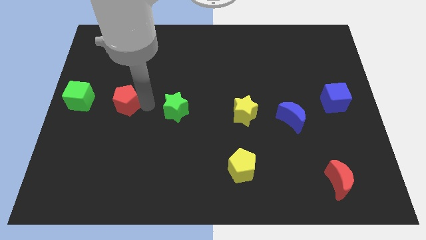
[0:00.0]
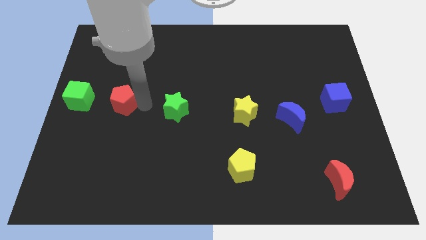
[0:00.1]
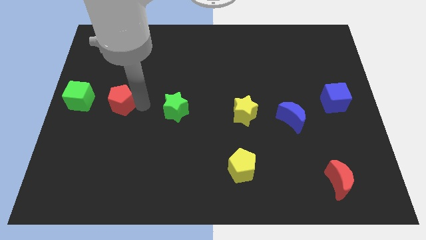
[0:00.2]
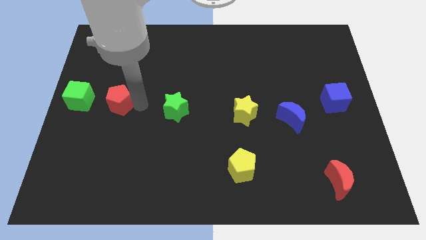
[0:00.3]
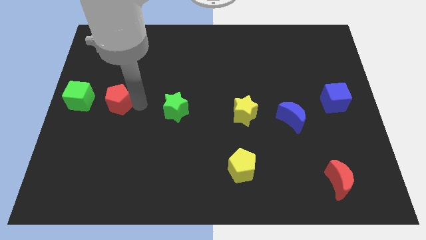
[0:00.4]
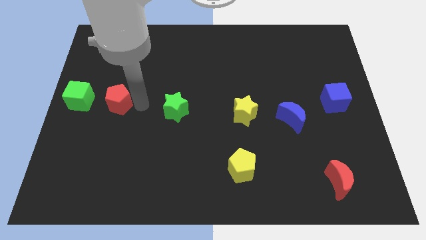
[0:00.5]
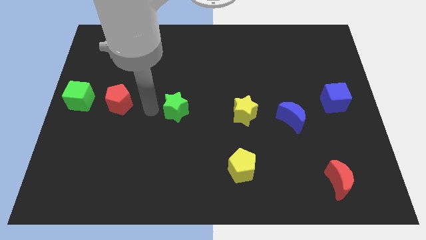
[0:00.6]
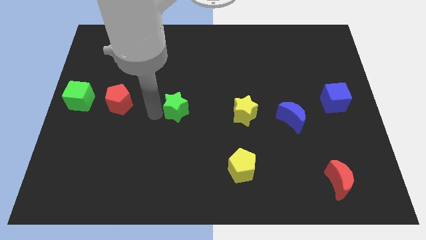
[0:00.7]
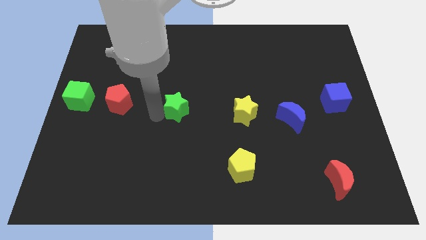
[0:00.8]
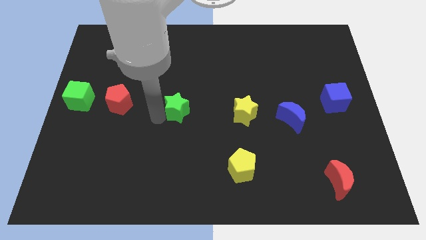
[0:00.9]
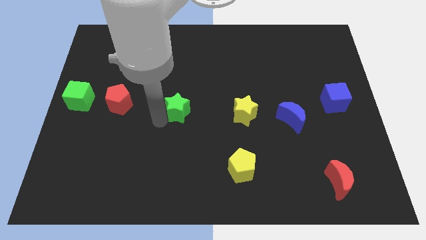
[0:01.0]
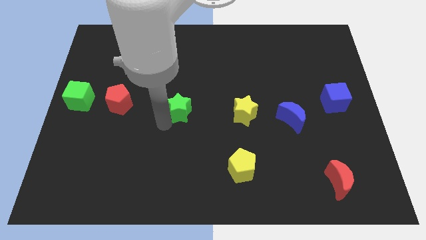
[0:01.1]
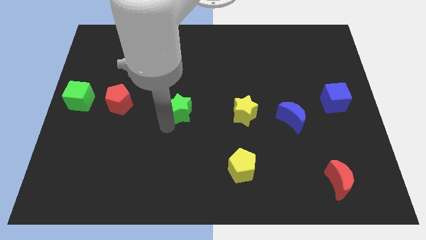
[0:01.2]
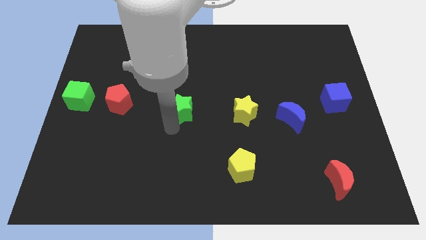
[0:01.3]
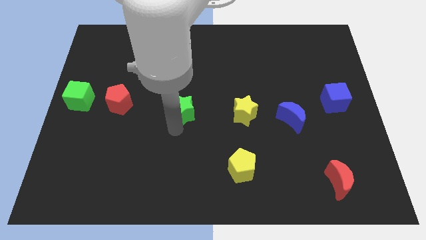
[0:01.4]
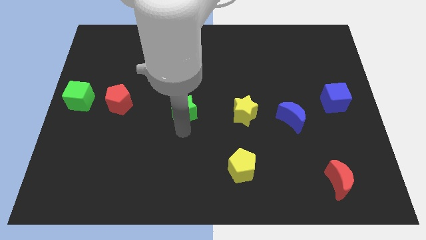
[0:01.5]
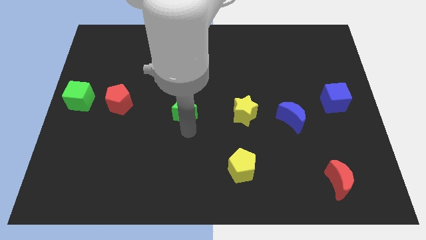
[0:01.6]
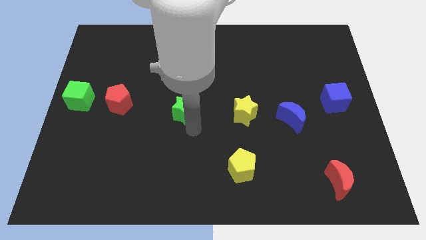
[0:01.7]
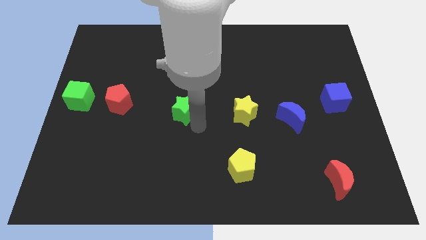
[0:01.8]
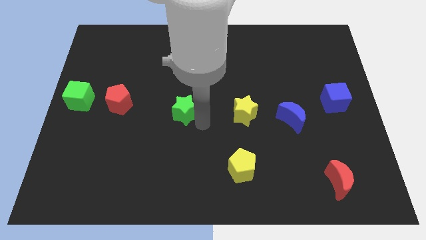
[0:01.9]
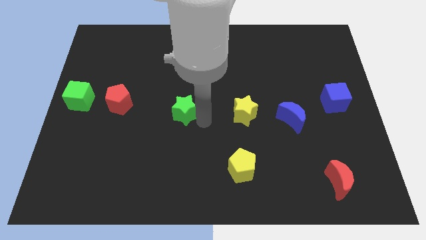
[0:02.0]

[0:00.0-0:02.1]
move the green star to the horizontal line

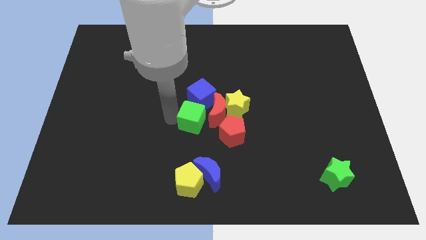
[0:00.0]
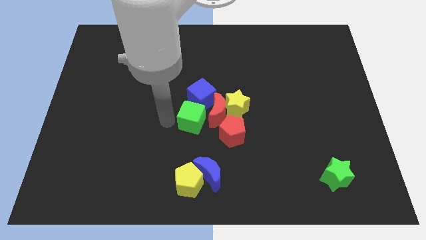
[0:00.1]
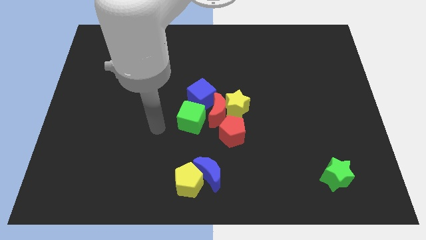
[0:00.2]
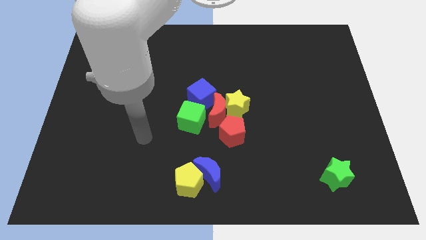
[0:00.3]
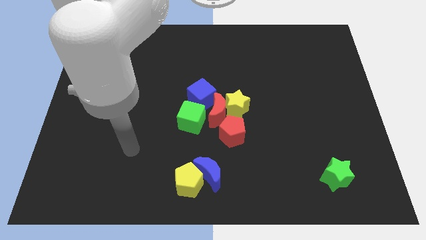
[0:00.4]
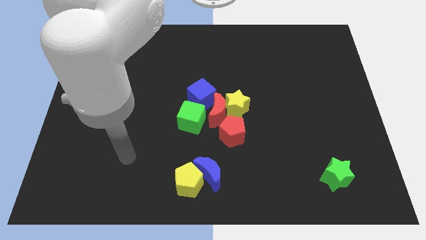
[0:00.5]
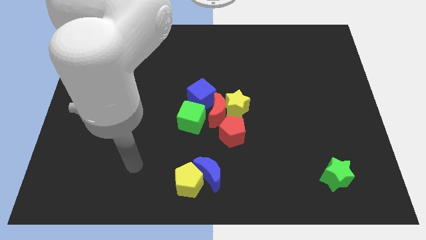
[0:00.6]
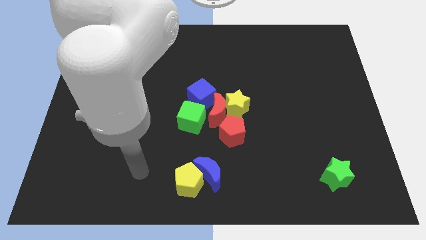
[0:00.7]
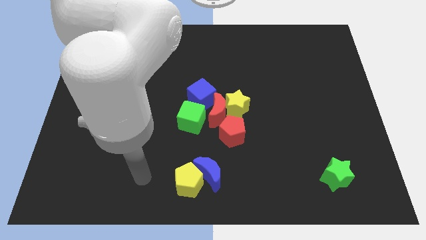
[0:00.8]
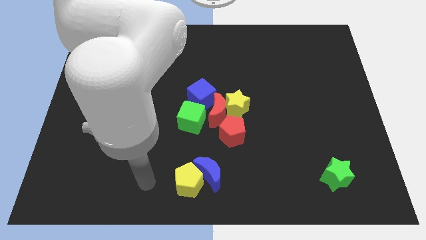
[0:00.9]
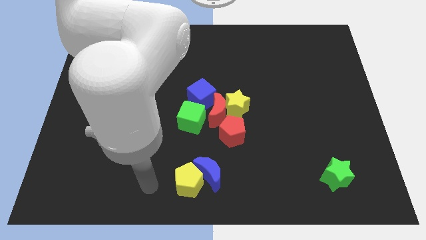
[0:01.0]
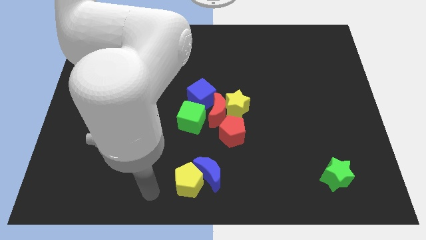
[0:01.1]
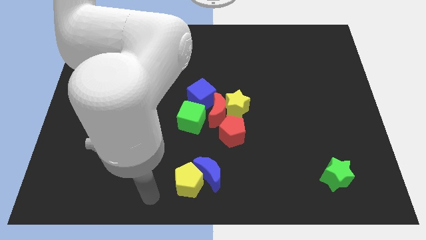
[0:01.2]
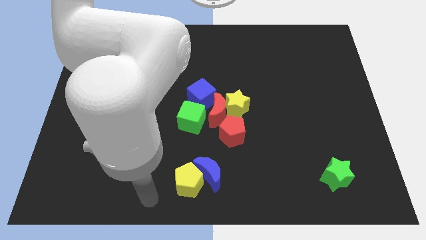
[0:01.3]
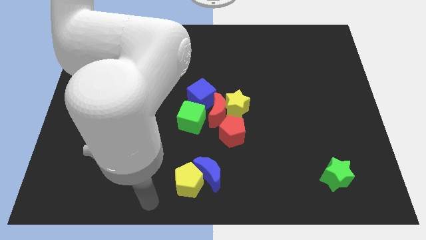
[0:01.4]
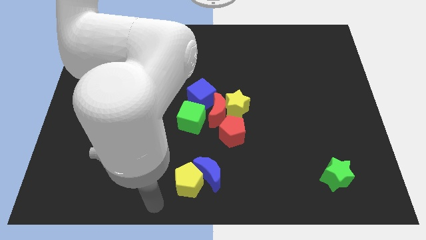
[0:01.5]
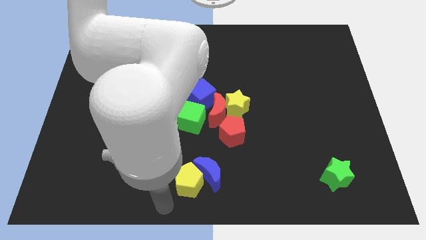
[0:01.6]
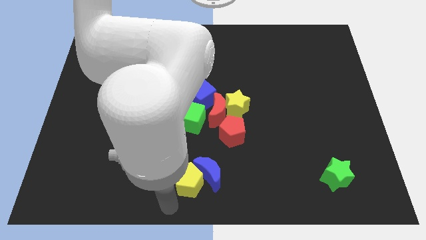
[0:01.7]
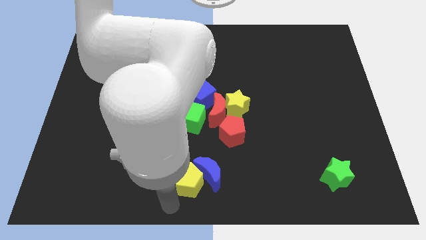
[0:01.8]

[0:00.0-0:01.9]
point your arm to the bottom left of the yellow pentagon

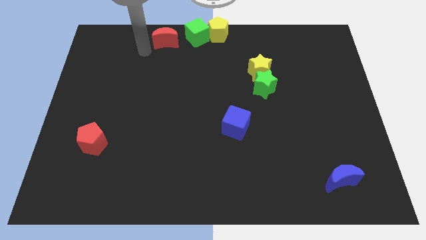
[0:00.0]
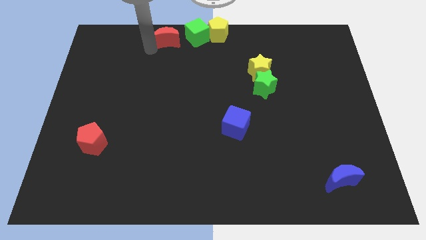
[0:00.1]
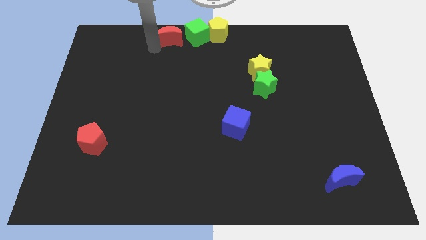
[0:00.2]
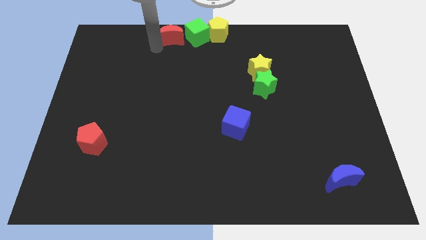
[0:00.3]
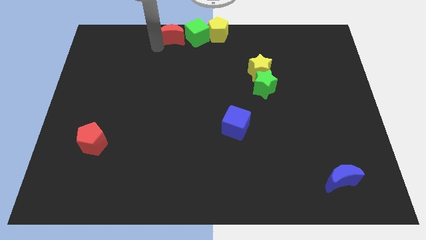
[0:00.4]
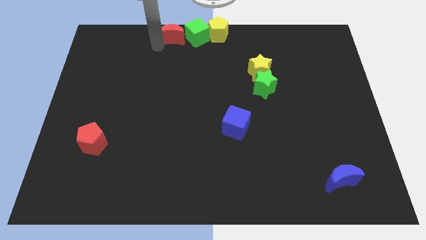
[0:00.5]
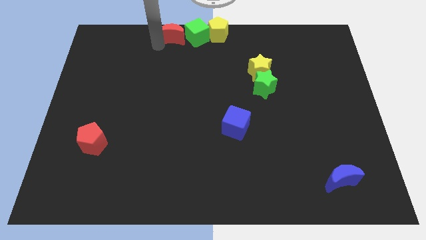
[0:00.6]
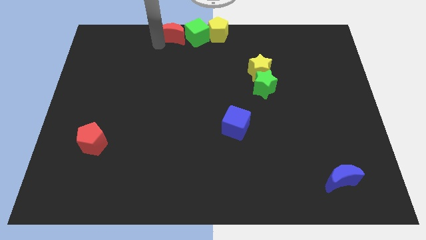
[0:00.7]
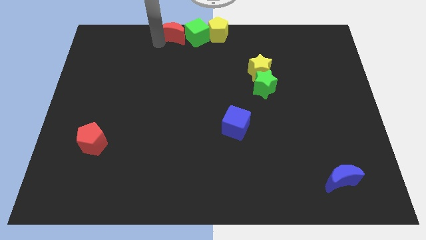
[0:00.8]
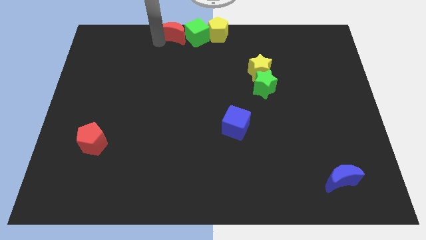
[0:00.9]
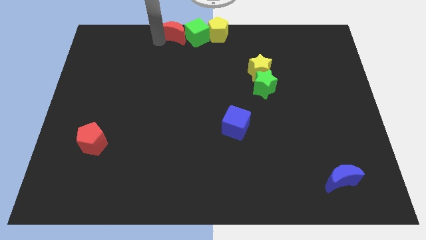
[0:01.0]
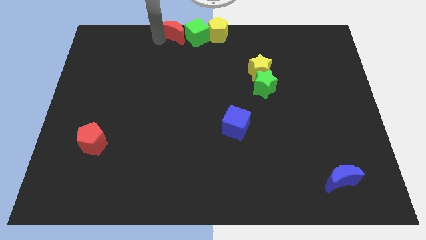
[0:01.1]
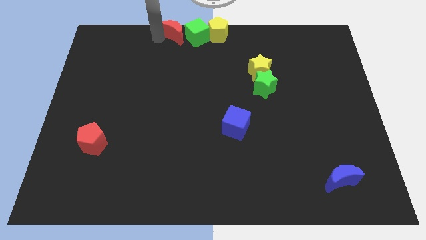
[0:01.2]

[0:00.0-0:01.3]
slide the red moon close to the left side of the green cube

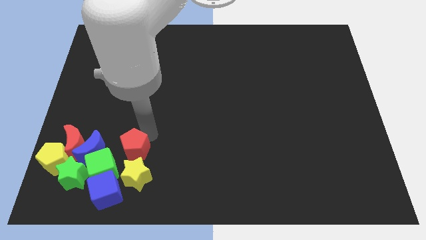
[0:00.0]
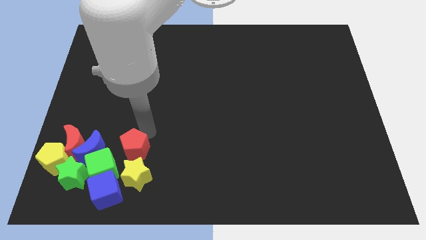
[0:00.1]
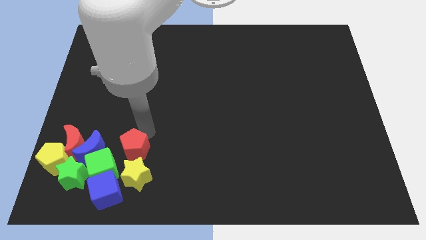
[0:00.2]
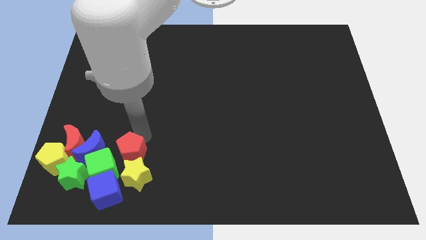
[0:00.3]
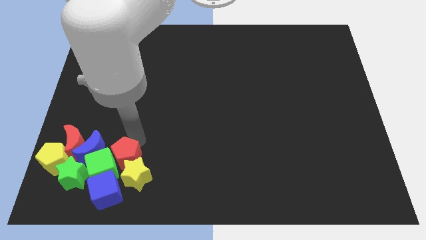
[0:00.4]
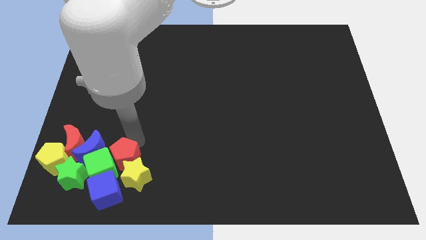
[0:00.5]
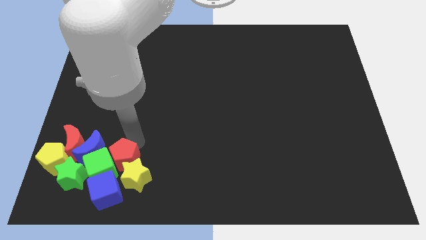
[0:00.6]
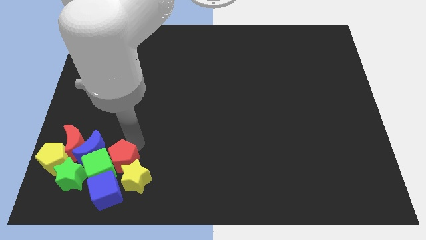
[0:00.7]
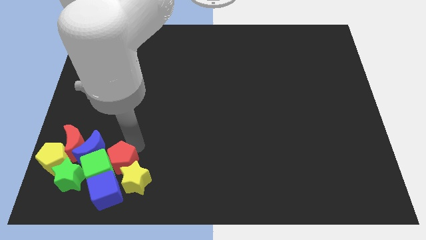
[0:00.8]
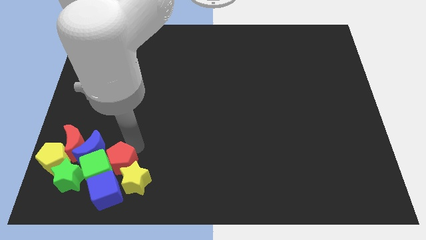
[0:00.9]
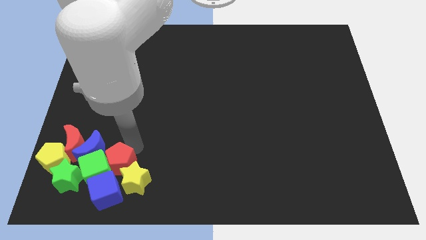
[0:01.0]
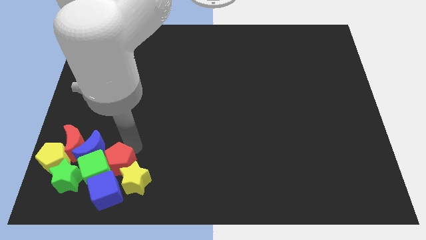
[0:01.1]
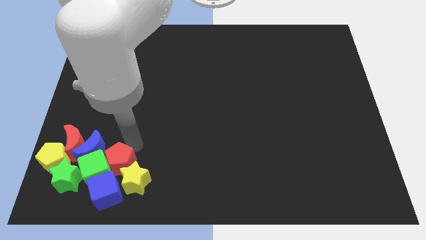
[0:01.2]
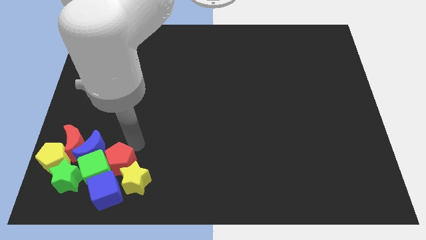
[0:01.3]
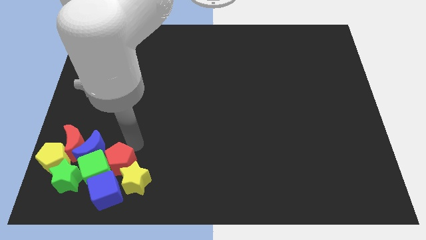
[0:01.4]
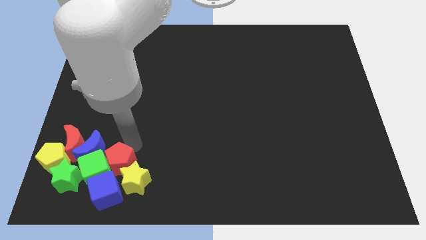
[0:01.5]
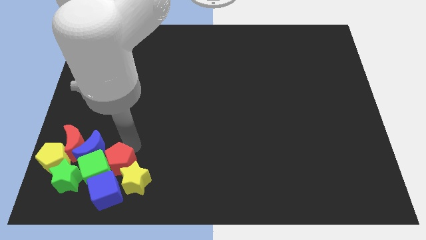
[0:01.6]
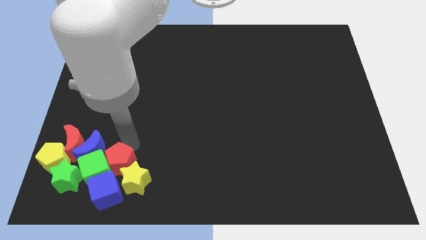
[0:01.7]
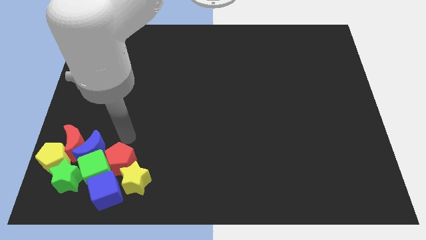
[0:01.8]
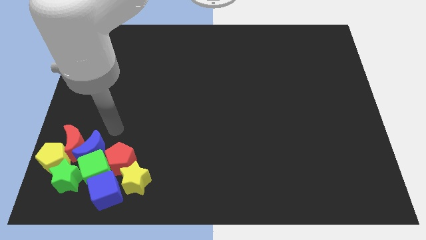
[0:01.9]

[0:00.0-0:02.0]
place the red pentagon to the top of the yellow star

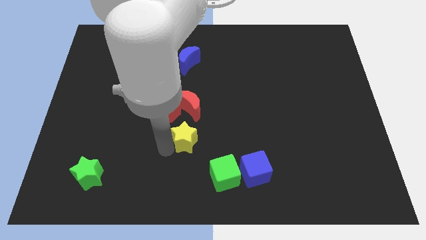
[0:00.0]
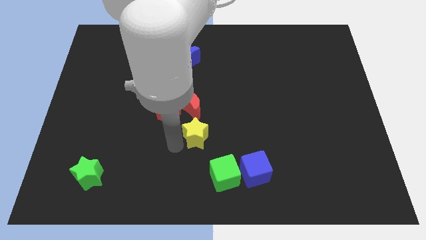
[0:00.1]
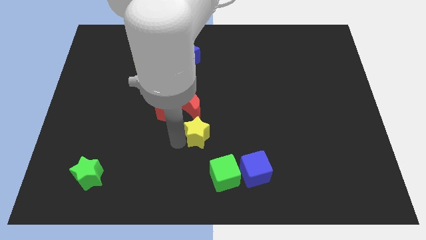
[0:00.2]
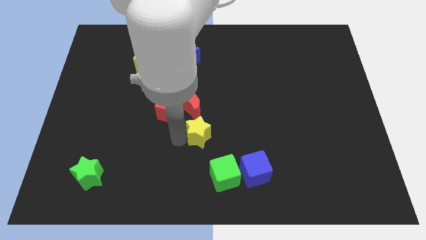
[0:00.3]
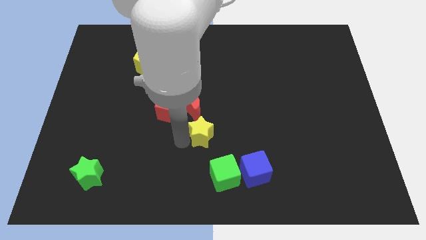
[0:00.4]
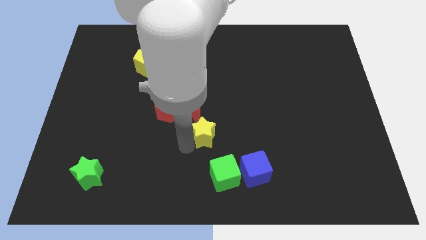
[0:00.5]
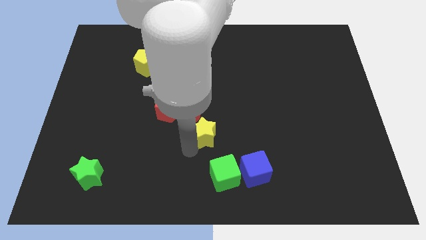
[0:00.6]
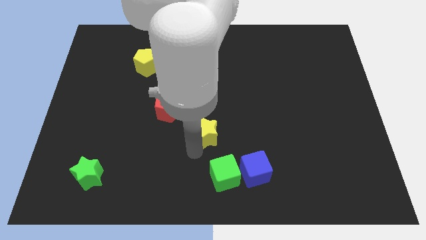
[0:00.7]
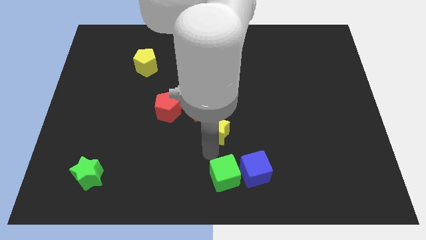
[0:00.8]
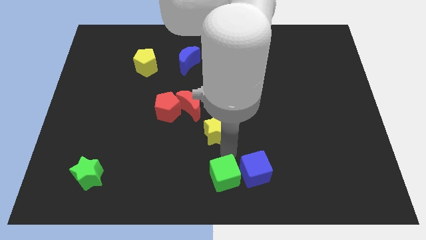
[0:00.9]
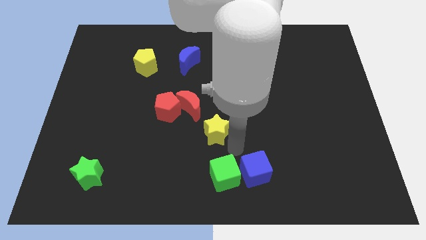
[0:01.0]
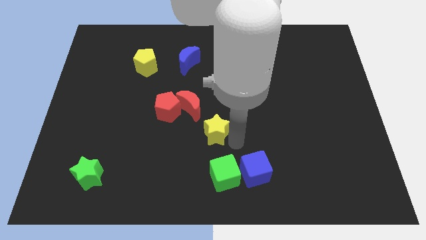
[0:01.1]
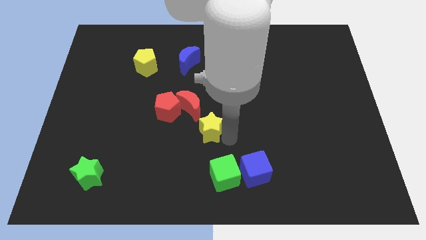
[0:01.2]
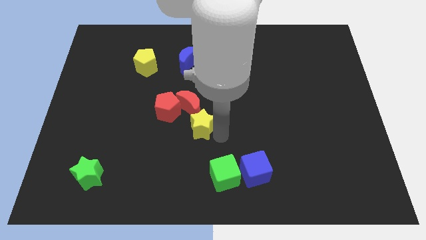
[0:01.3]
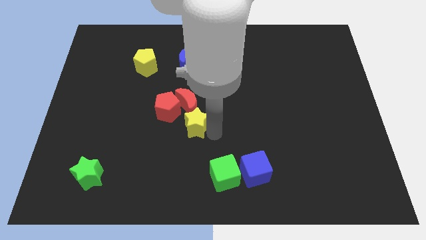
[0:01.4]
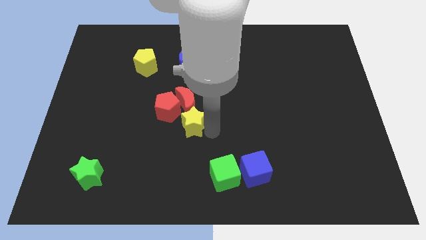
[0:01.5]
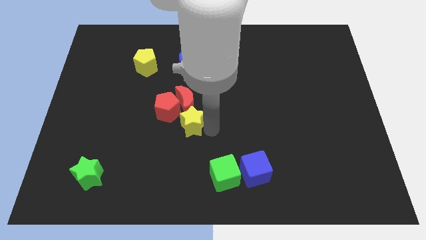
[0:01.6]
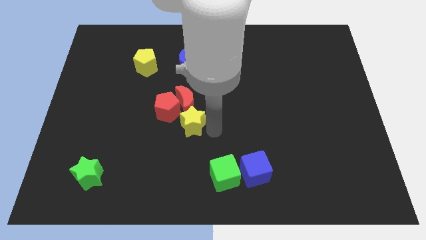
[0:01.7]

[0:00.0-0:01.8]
push yellow star close to the red blocks
